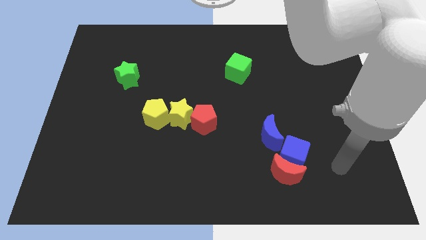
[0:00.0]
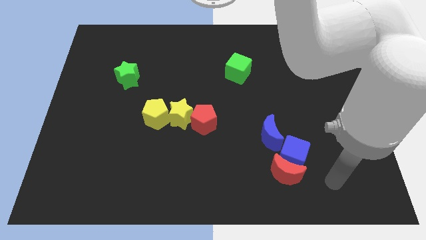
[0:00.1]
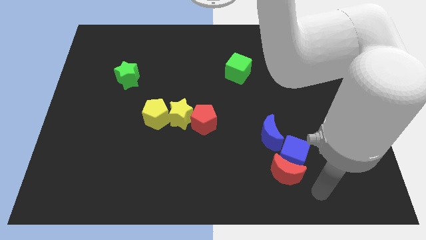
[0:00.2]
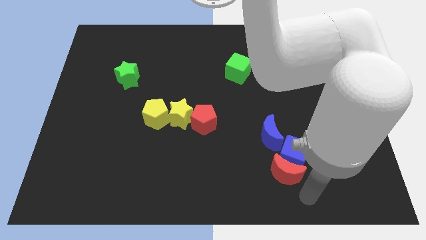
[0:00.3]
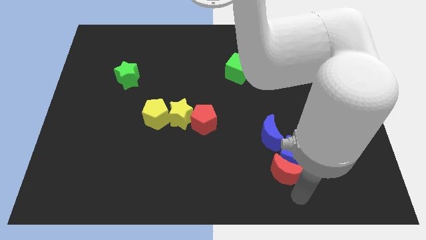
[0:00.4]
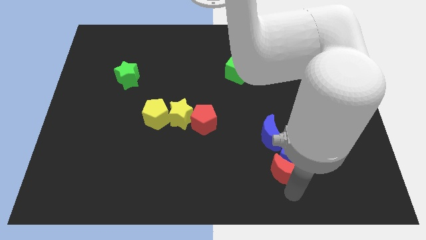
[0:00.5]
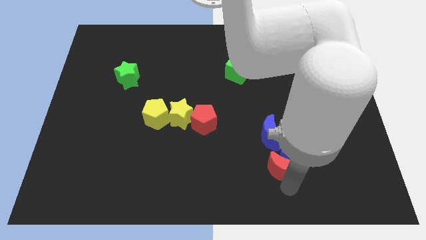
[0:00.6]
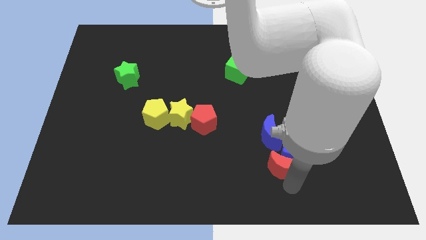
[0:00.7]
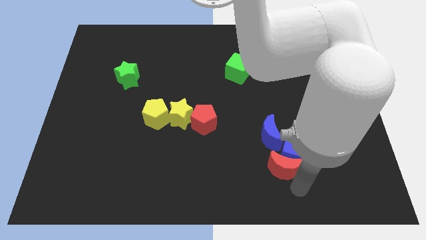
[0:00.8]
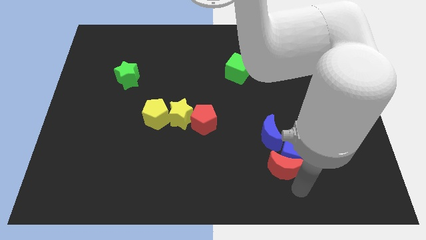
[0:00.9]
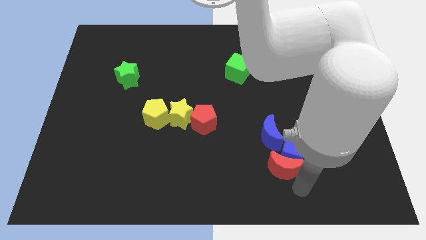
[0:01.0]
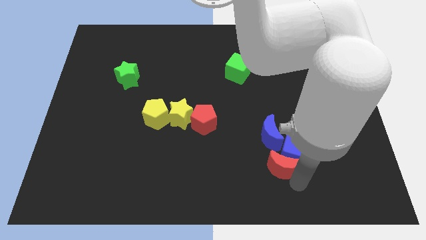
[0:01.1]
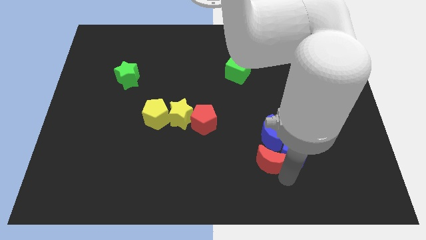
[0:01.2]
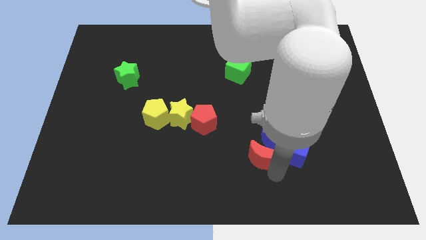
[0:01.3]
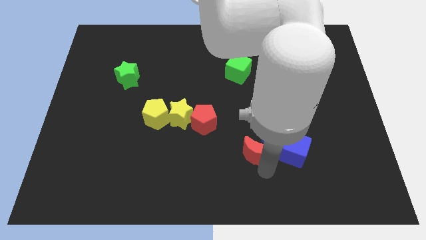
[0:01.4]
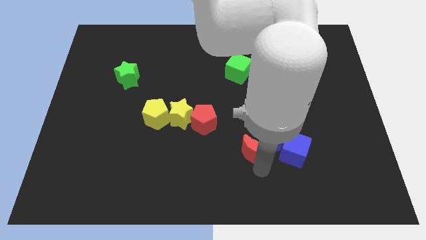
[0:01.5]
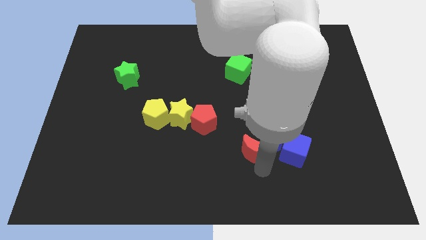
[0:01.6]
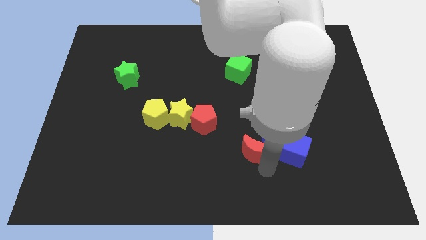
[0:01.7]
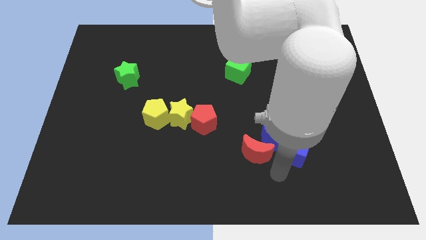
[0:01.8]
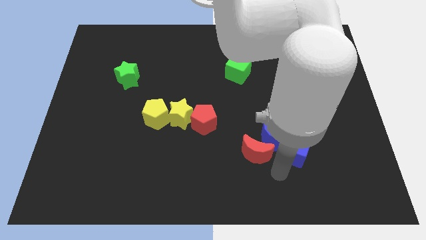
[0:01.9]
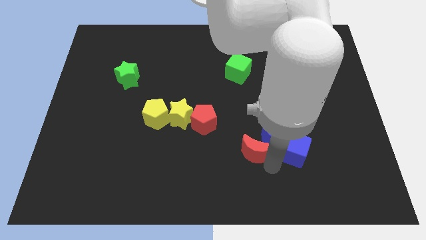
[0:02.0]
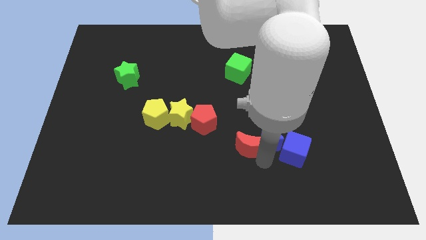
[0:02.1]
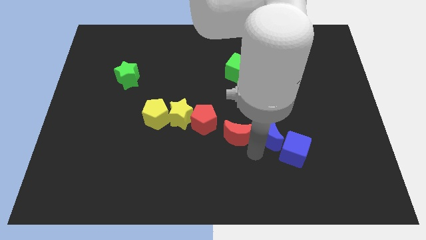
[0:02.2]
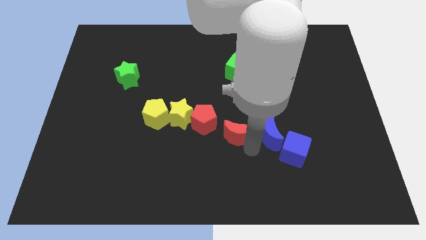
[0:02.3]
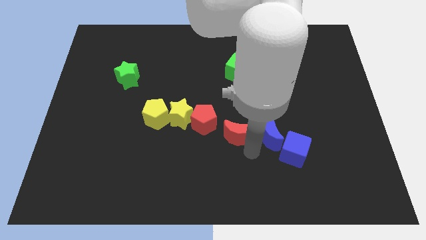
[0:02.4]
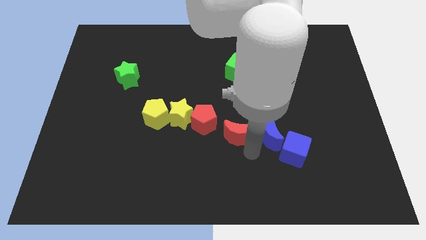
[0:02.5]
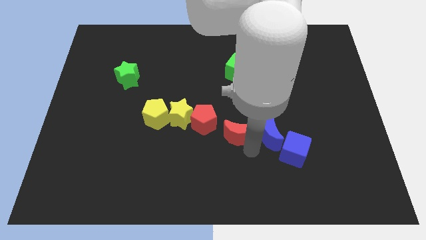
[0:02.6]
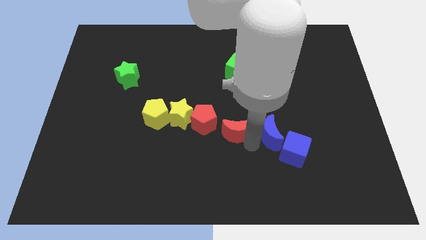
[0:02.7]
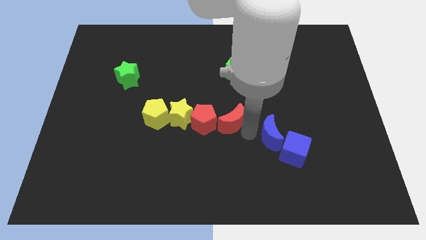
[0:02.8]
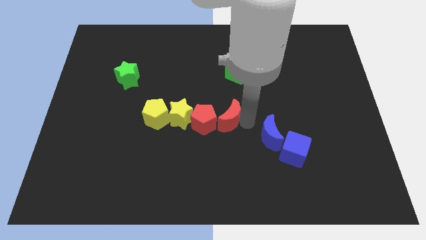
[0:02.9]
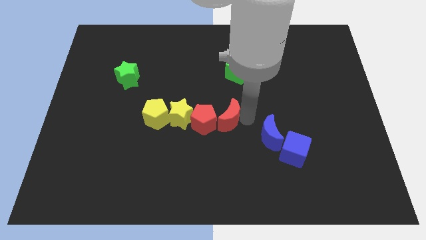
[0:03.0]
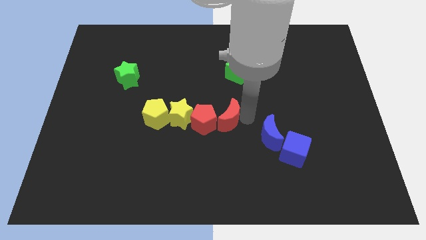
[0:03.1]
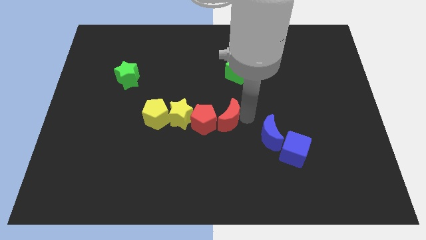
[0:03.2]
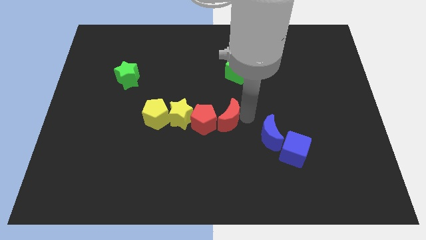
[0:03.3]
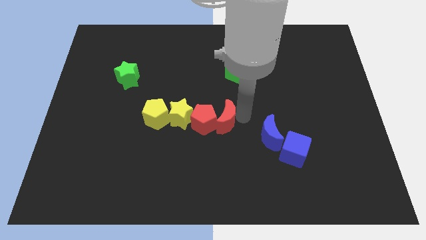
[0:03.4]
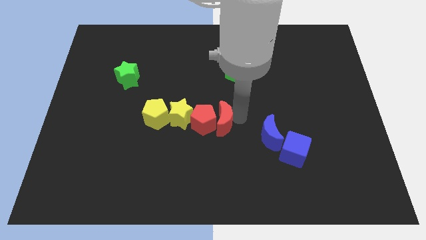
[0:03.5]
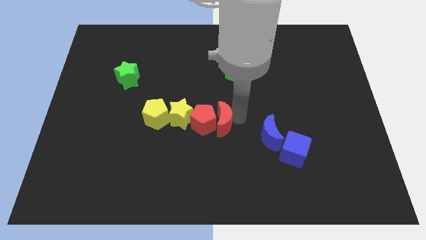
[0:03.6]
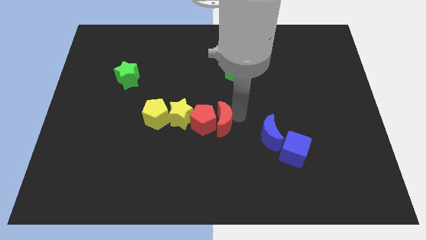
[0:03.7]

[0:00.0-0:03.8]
move the red crescent close to the red pentagon

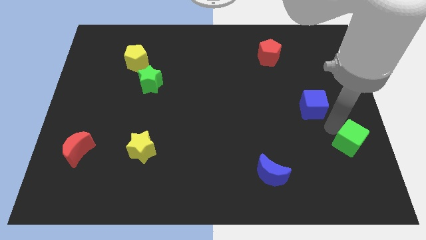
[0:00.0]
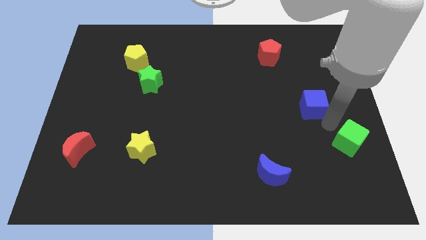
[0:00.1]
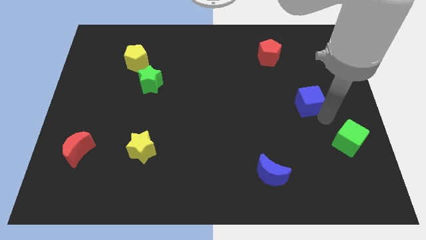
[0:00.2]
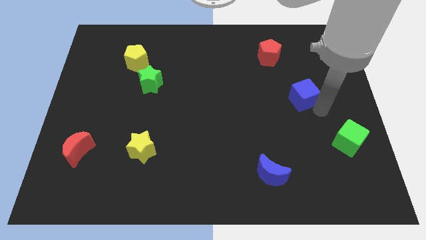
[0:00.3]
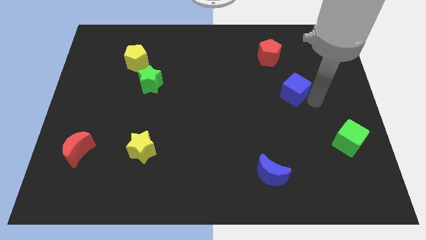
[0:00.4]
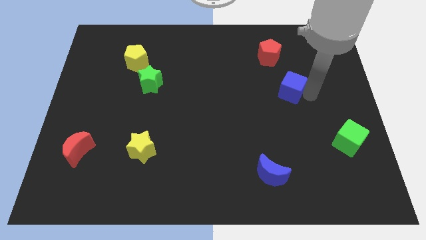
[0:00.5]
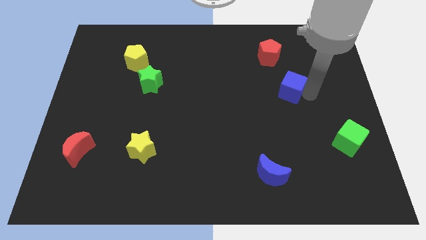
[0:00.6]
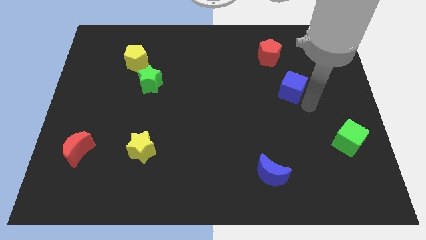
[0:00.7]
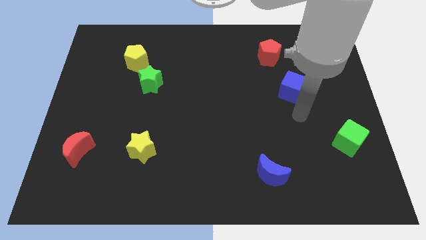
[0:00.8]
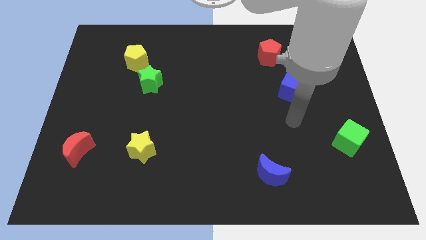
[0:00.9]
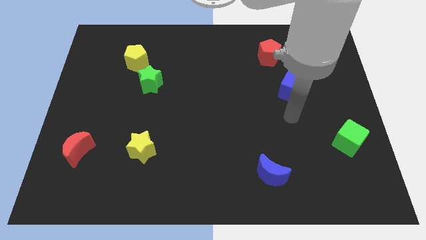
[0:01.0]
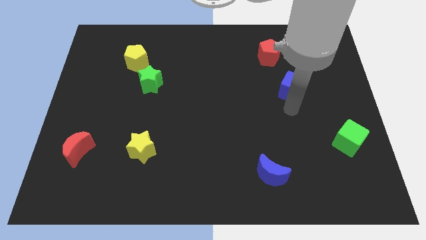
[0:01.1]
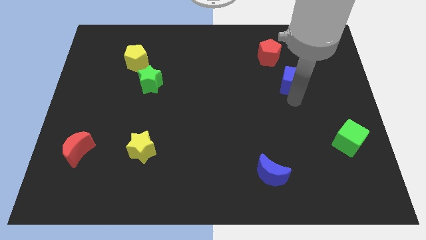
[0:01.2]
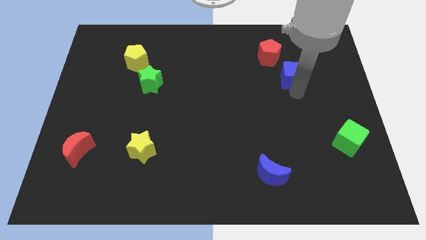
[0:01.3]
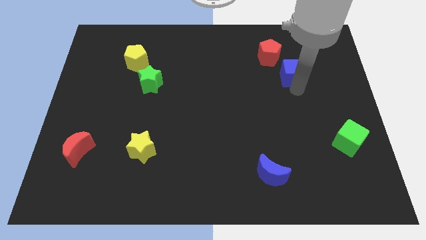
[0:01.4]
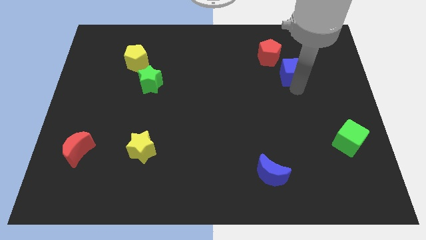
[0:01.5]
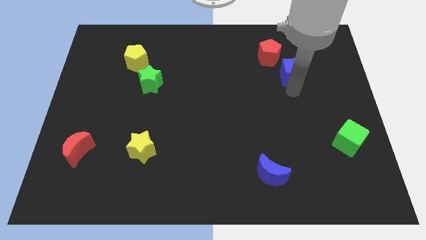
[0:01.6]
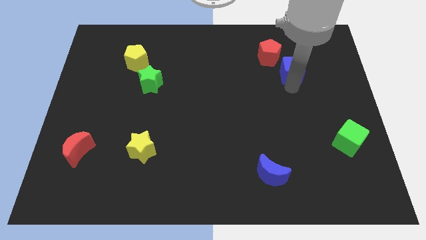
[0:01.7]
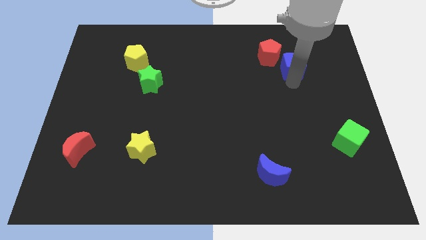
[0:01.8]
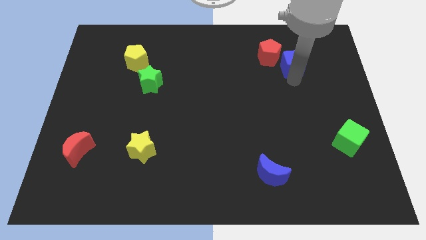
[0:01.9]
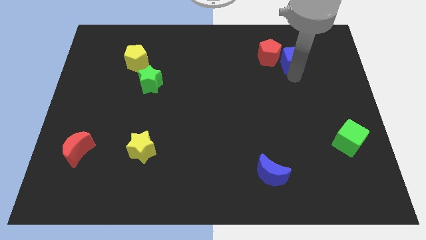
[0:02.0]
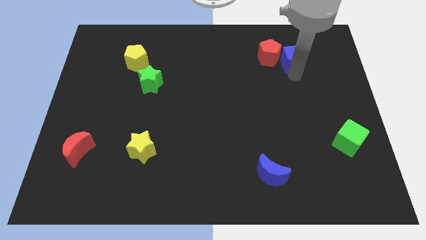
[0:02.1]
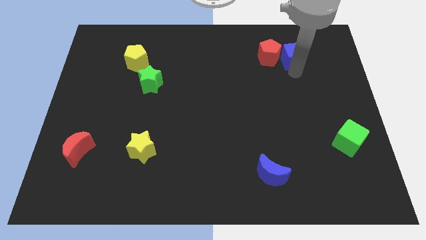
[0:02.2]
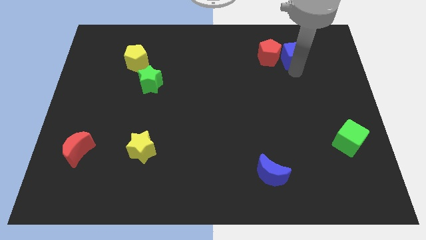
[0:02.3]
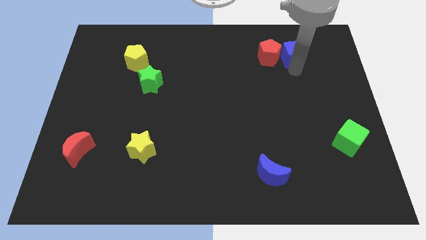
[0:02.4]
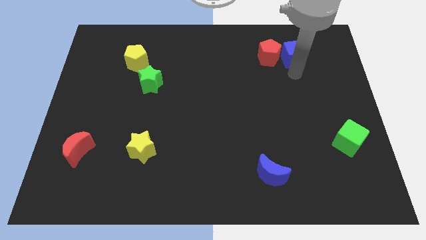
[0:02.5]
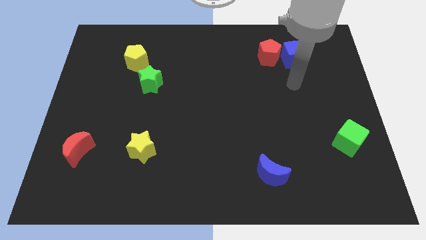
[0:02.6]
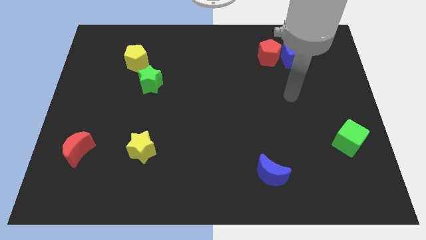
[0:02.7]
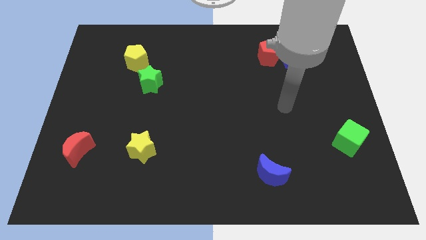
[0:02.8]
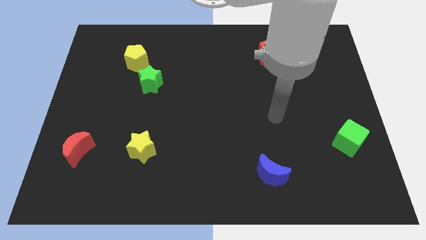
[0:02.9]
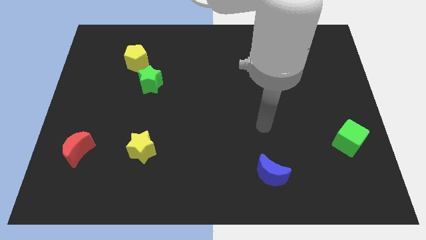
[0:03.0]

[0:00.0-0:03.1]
move the blue cube to the right of the red pentagon

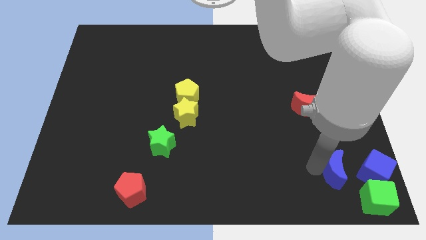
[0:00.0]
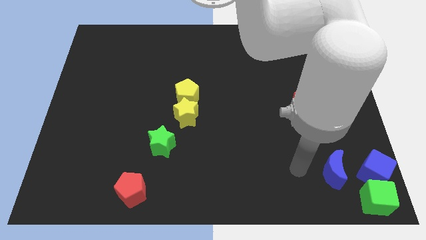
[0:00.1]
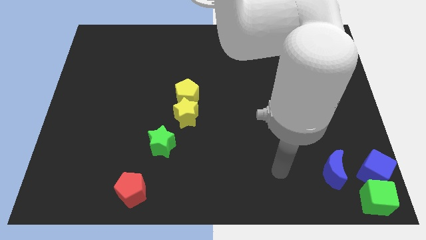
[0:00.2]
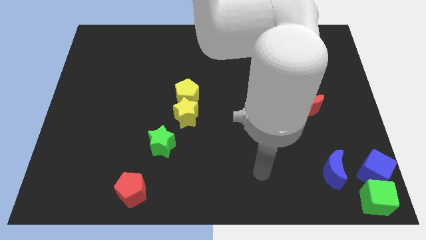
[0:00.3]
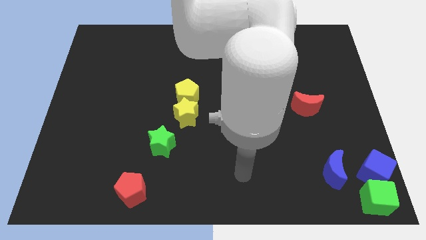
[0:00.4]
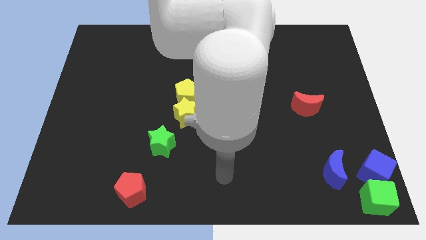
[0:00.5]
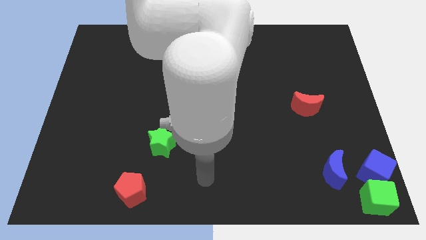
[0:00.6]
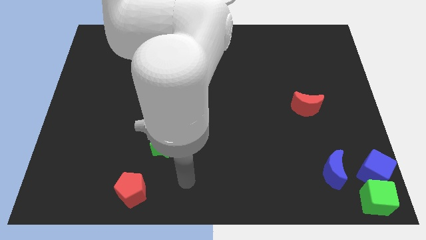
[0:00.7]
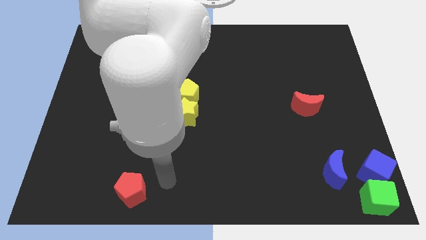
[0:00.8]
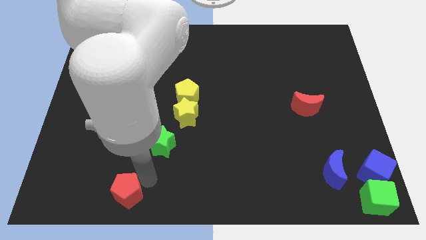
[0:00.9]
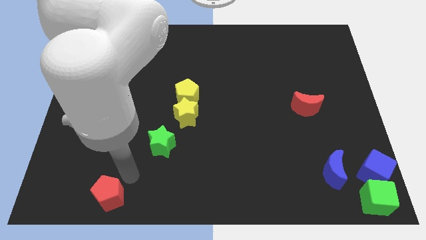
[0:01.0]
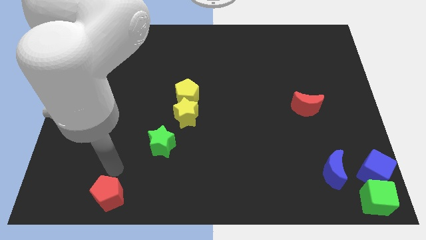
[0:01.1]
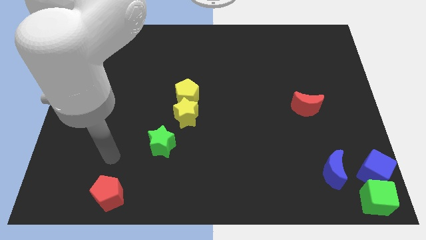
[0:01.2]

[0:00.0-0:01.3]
slightly move the red pentagon diagonally down

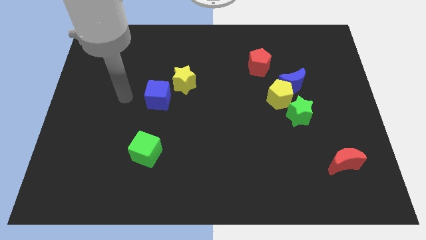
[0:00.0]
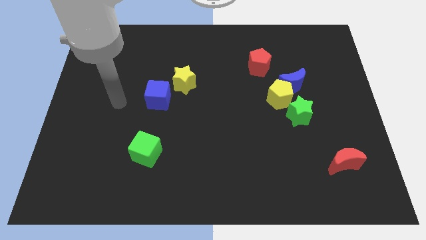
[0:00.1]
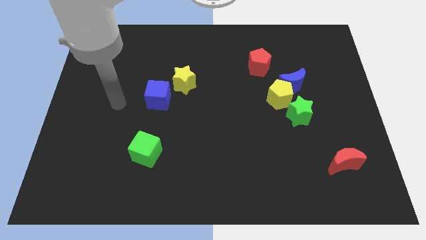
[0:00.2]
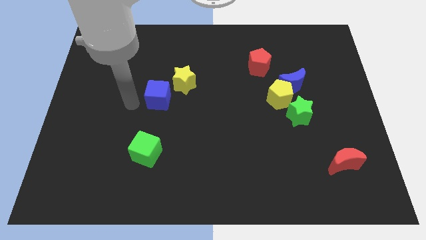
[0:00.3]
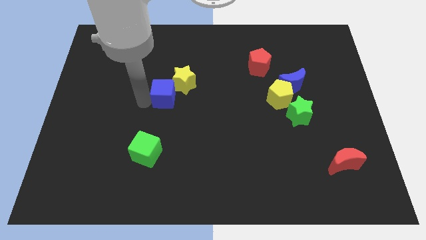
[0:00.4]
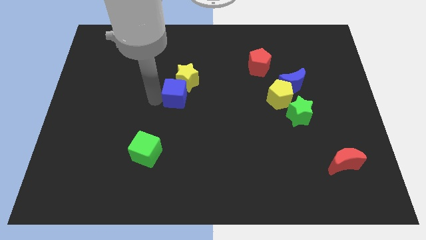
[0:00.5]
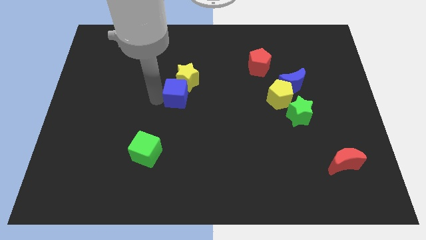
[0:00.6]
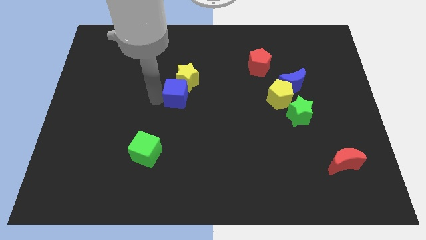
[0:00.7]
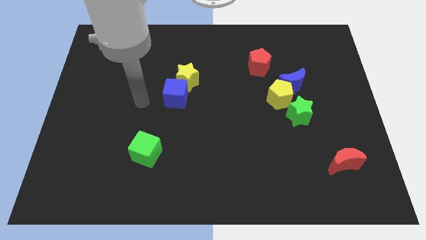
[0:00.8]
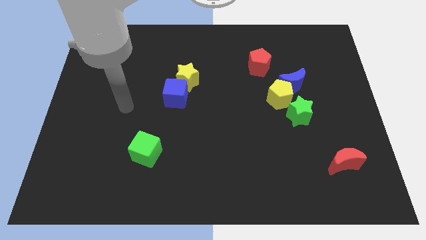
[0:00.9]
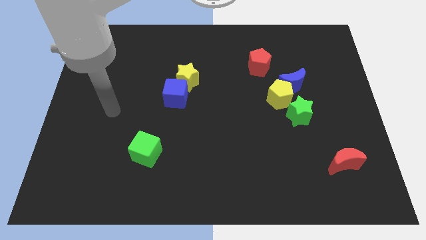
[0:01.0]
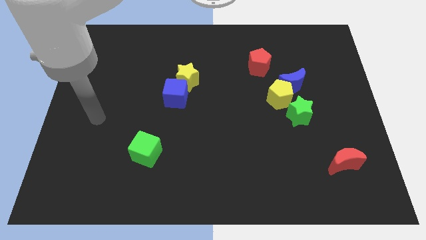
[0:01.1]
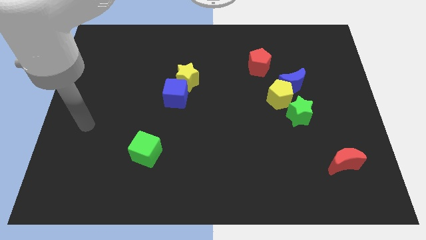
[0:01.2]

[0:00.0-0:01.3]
push the blue cube to the bottom of yellow star
